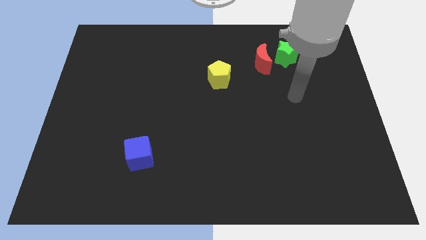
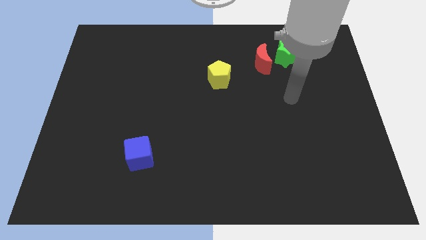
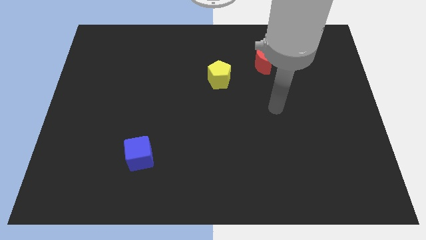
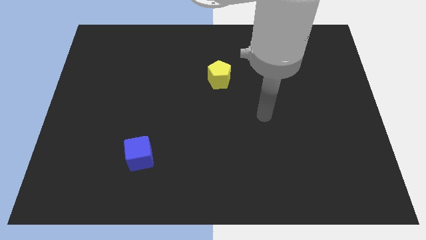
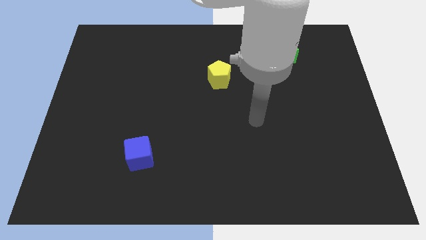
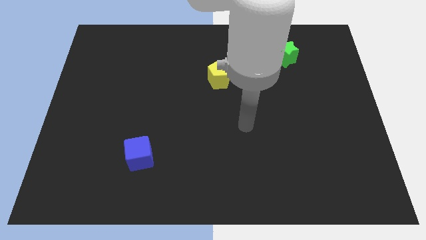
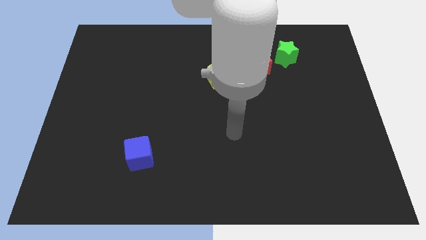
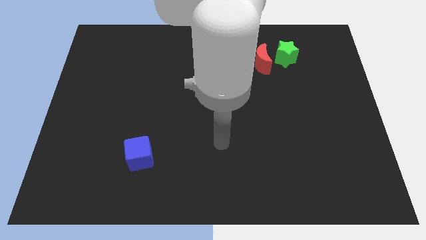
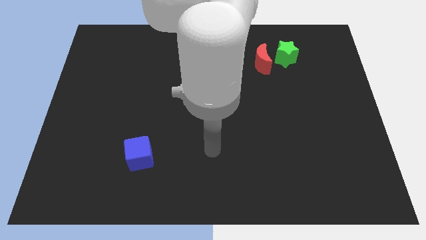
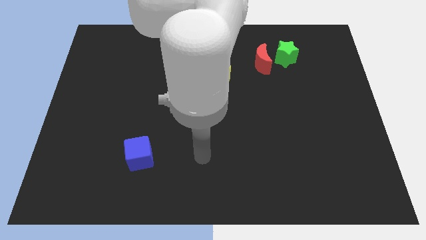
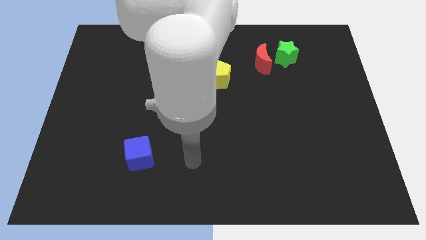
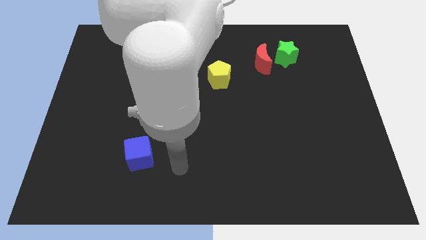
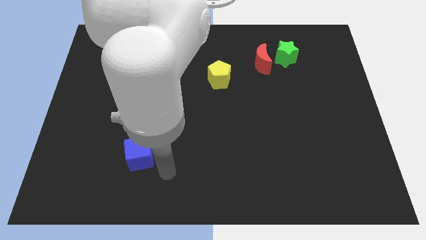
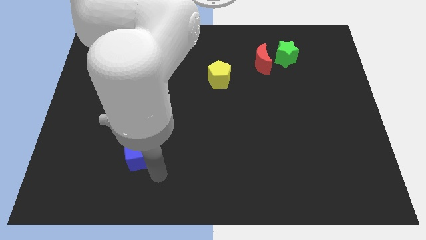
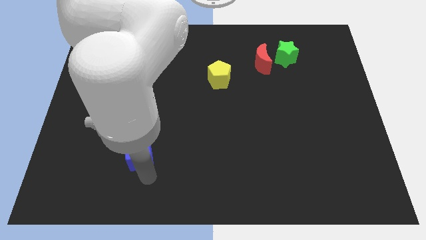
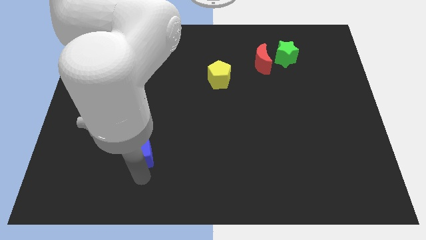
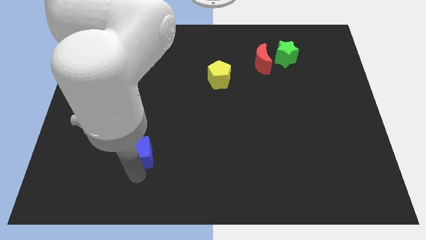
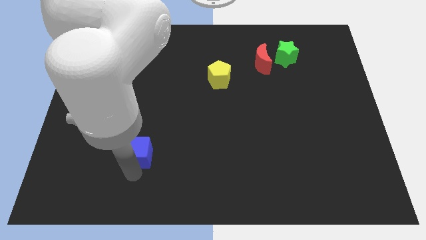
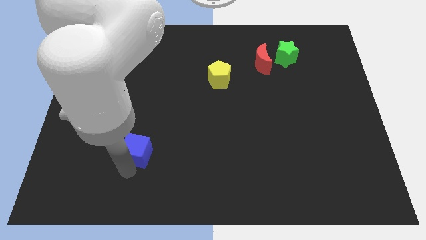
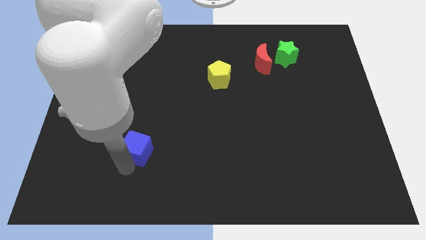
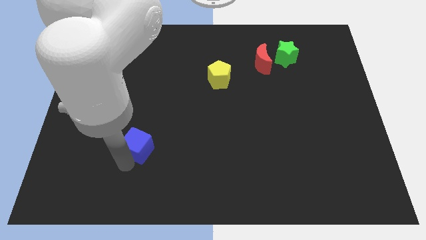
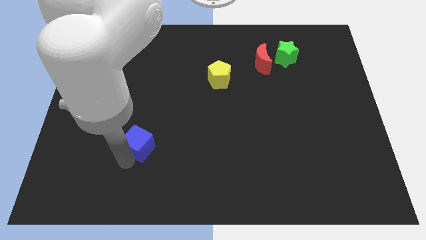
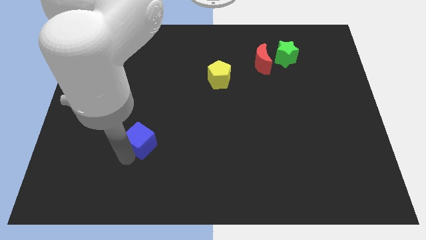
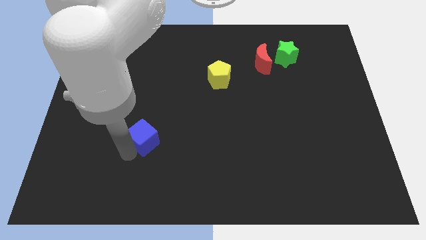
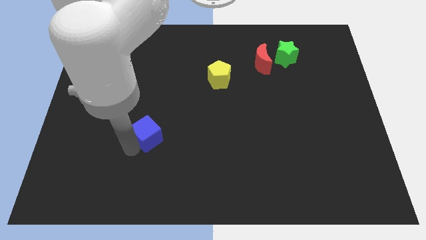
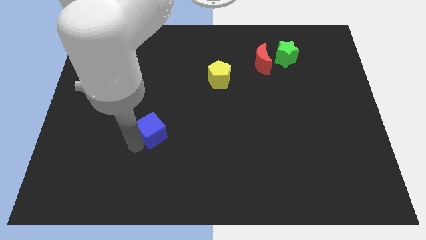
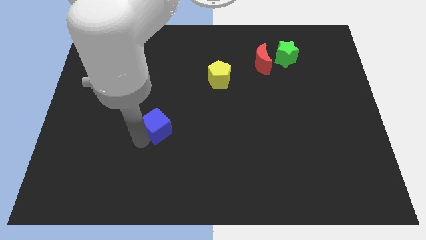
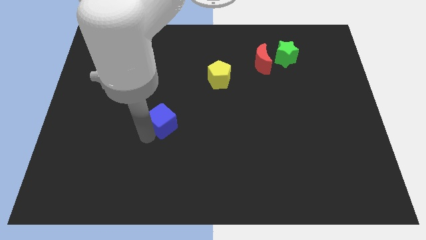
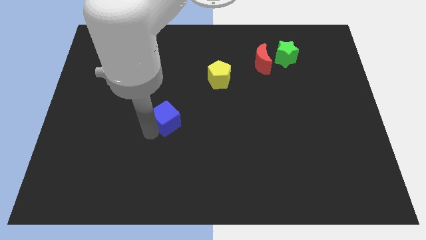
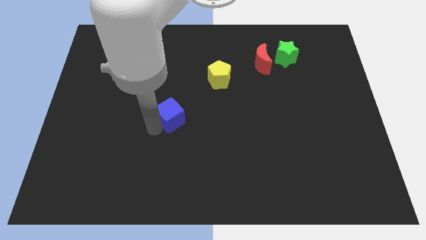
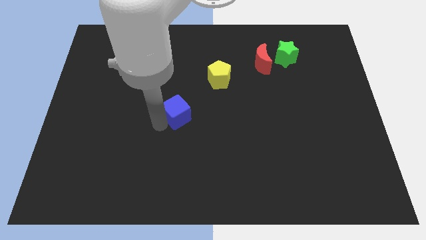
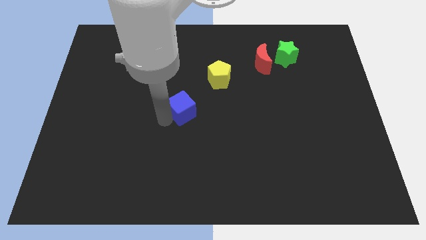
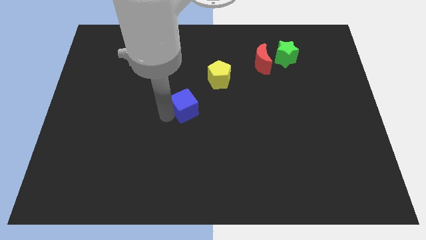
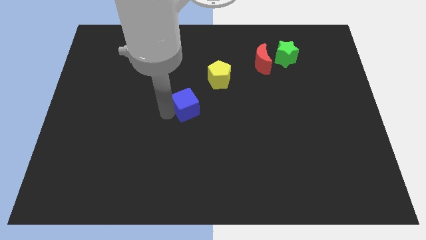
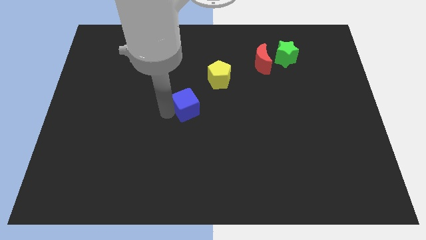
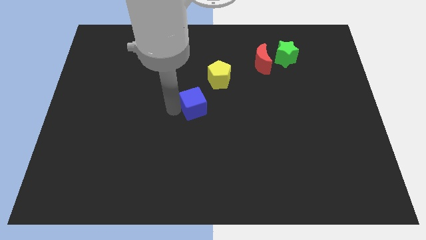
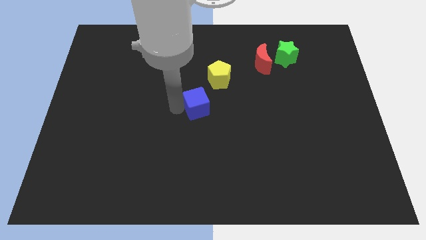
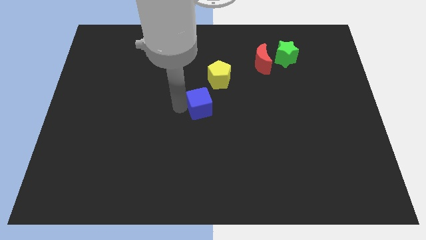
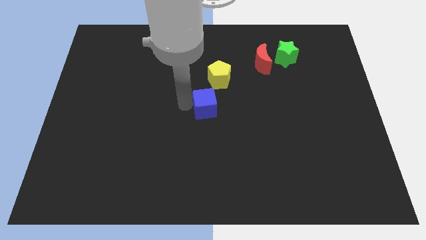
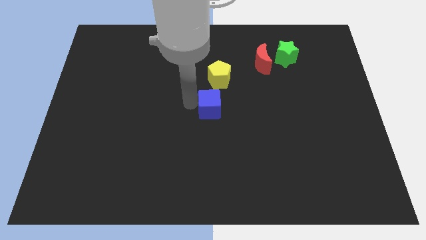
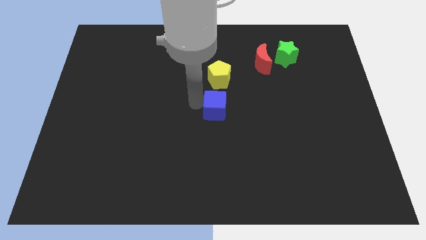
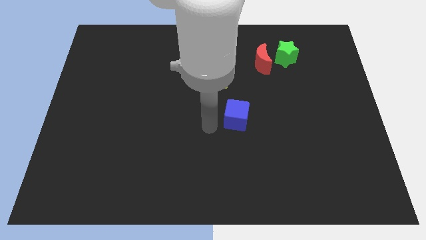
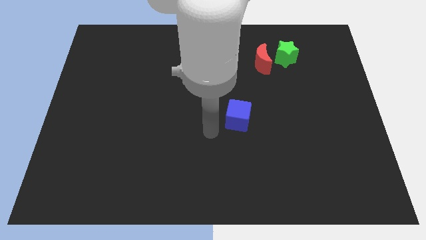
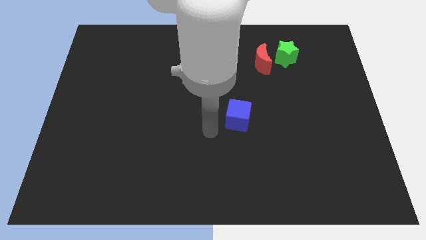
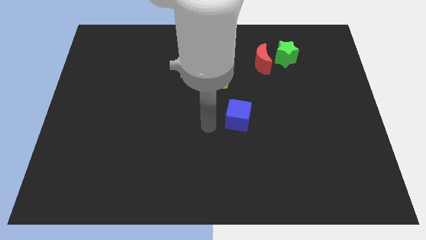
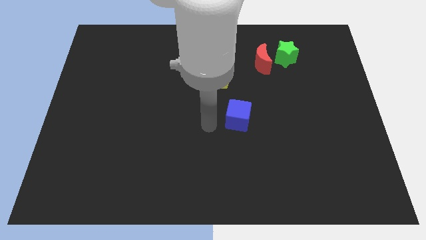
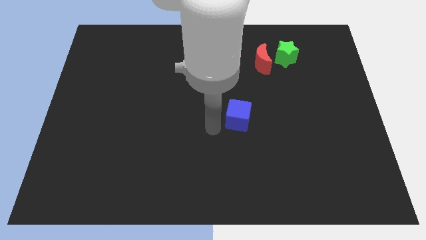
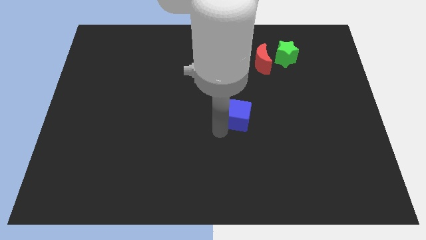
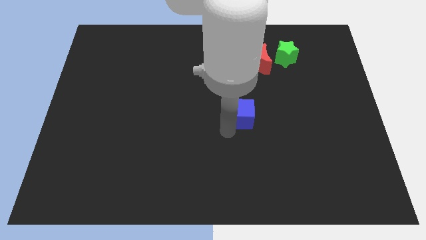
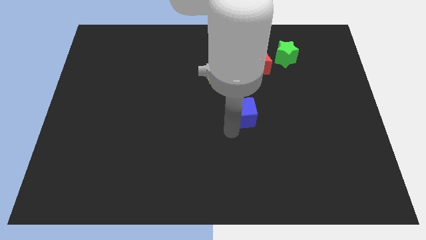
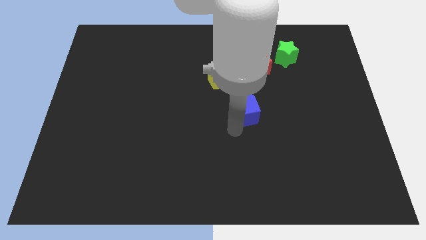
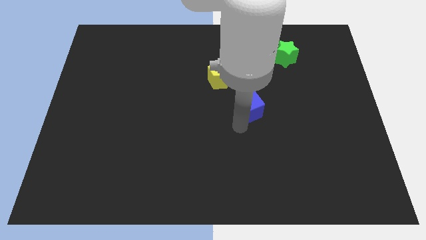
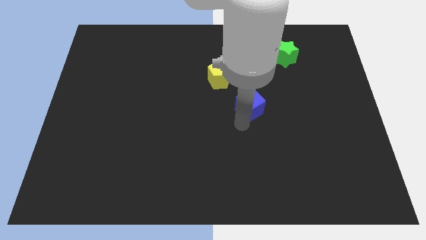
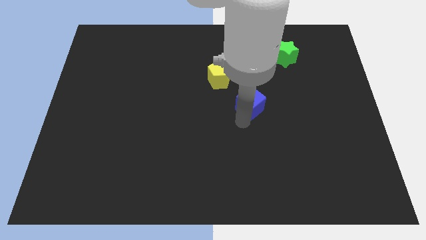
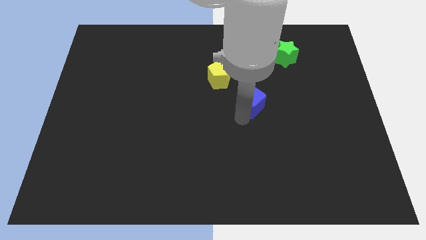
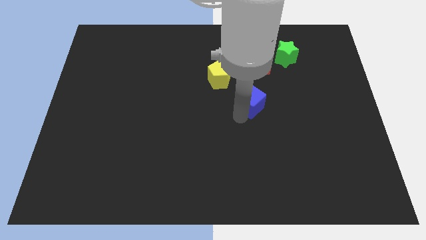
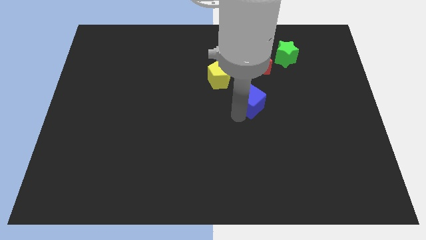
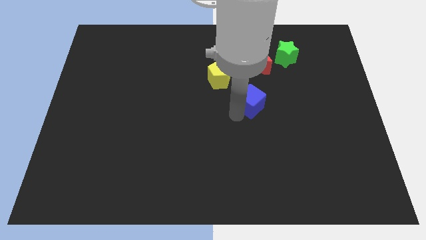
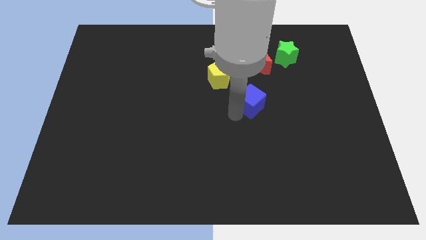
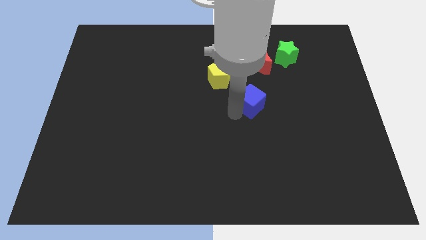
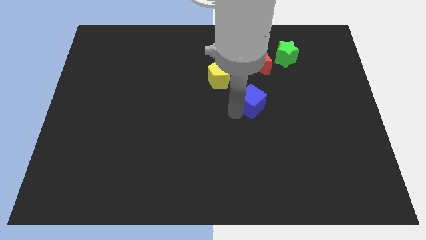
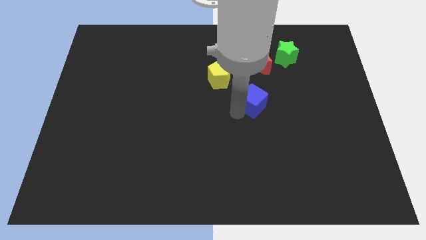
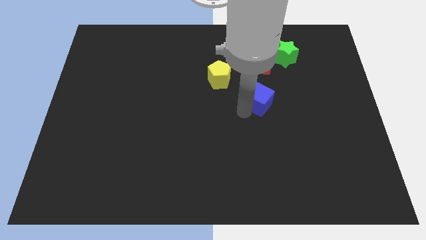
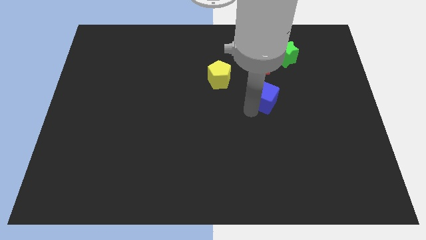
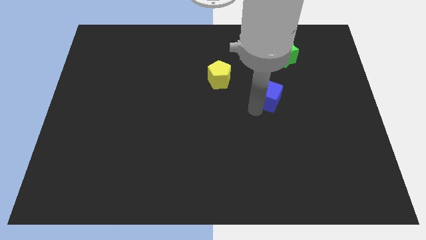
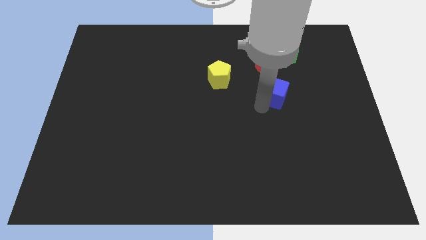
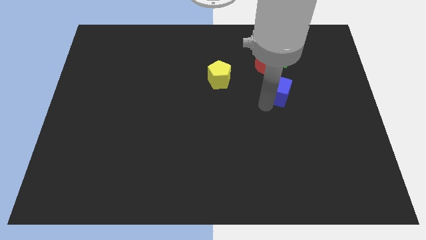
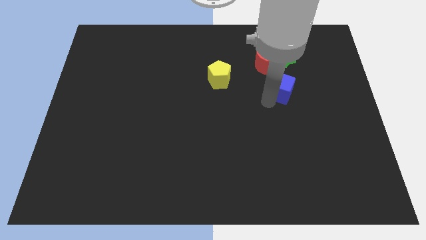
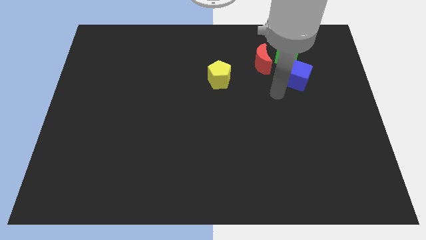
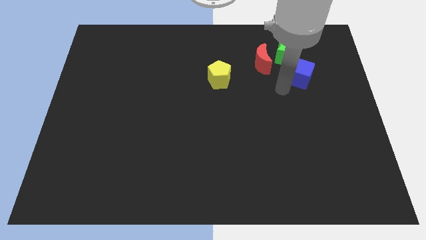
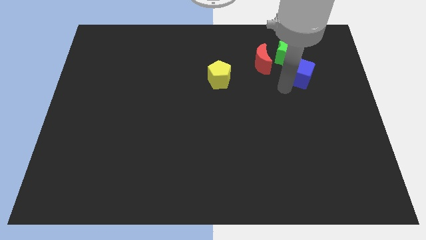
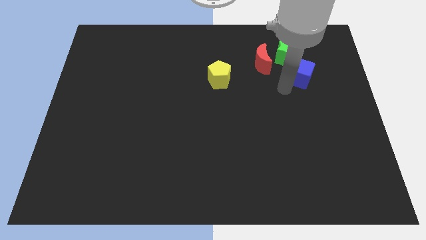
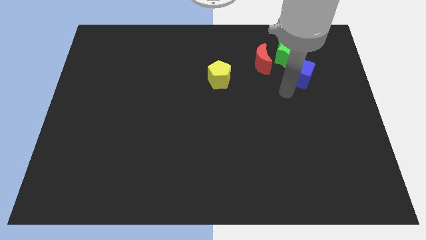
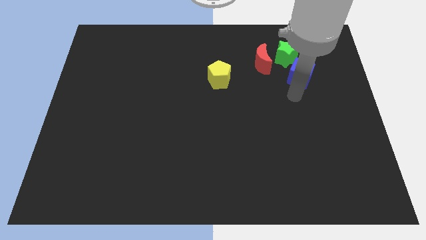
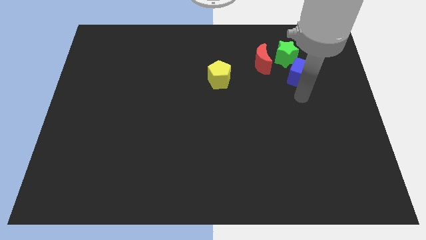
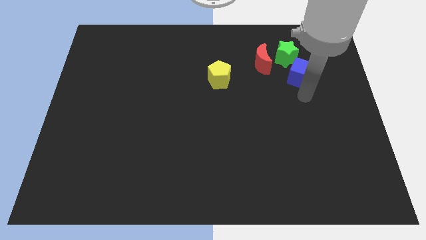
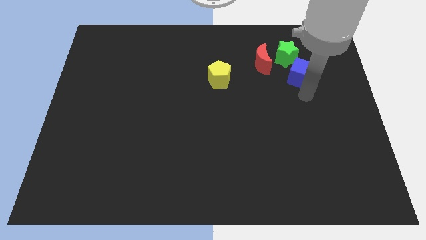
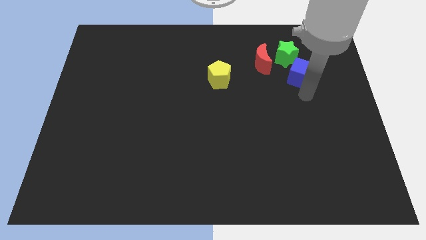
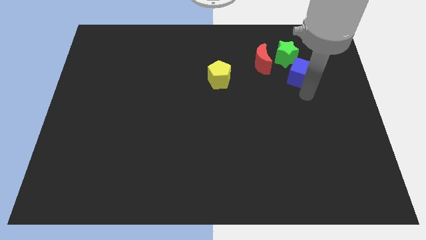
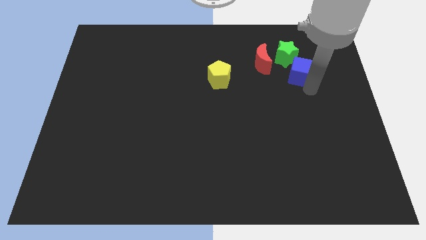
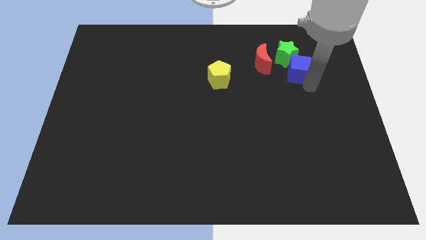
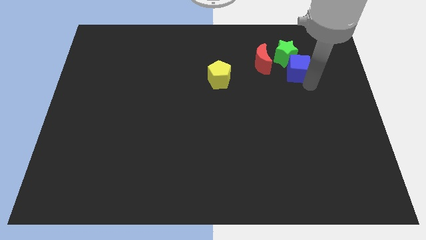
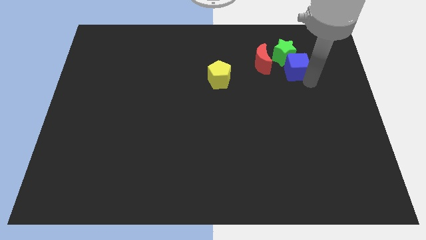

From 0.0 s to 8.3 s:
put the blue cube towards the green star
